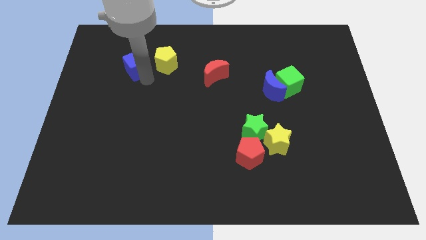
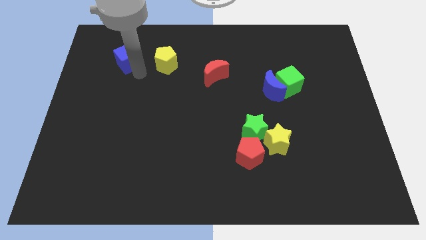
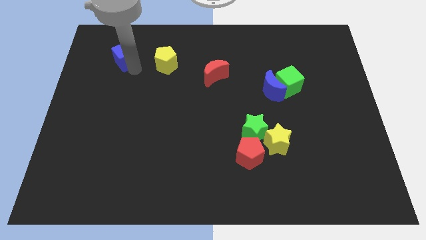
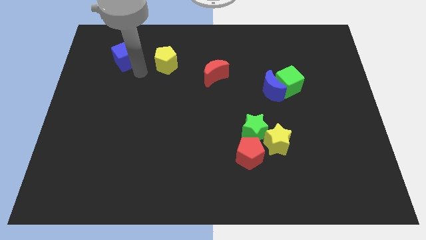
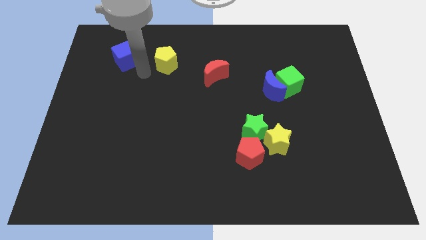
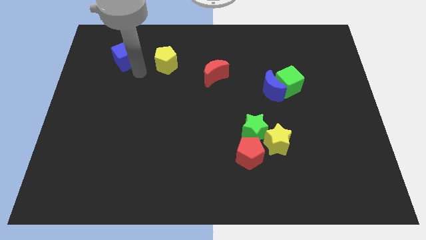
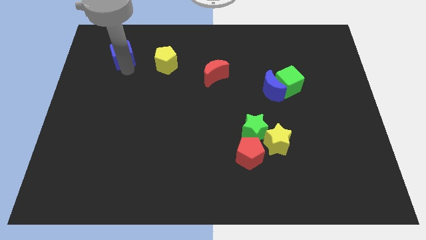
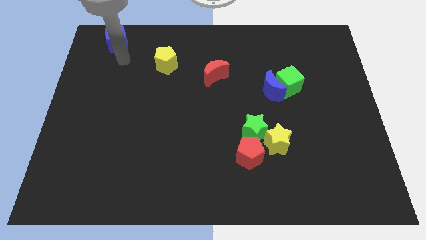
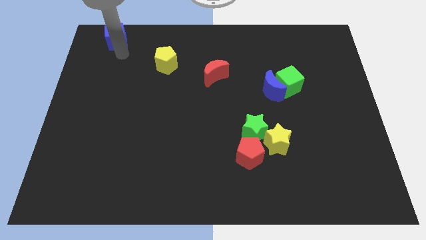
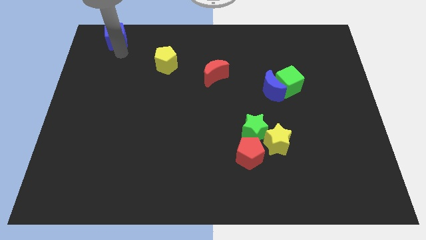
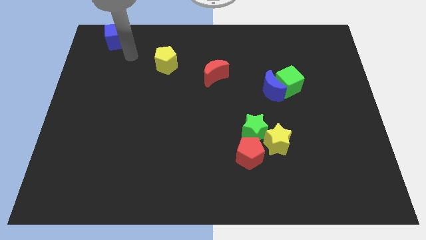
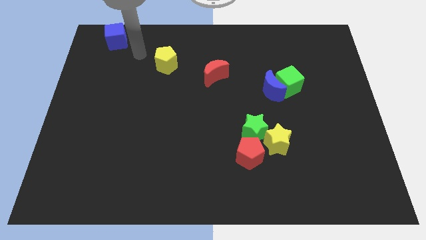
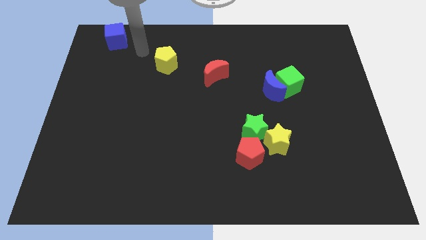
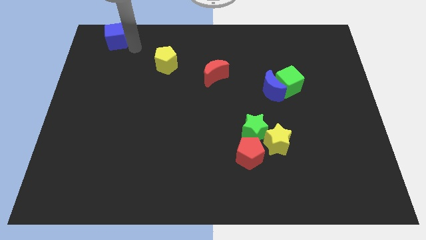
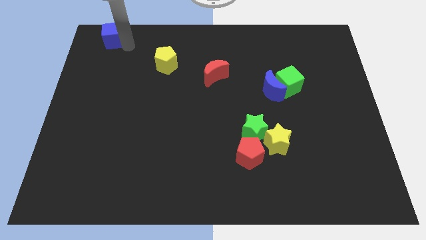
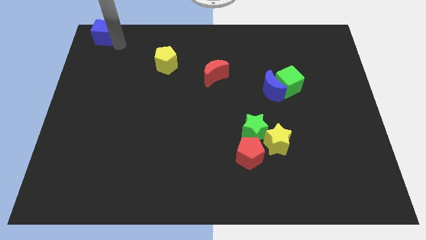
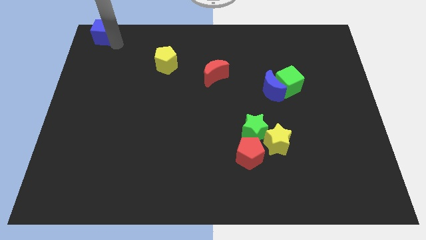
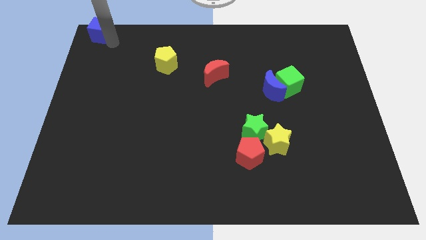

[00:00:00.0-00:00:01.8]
move the blue cube towards the top left corner

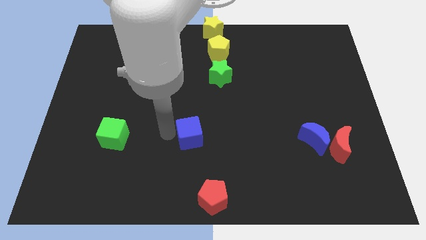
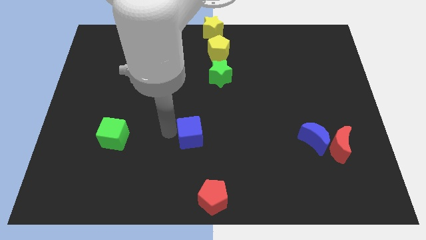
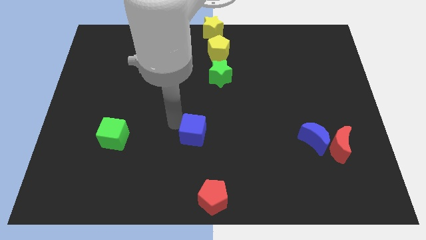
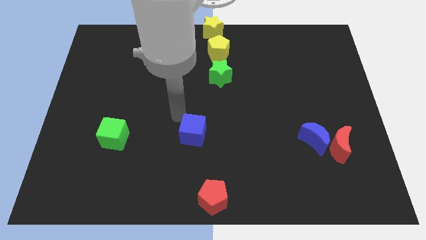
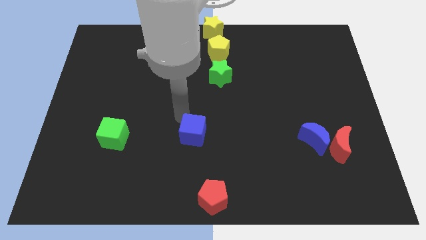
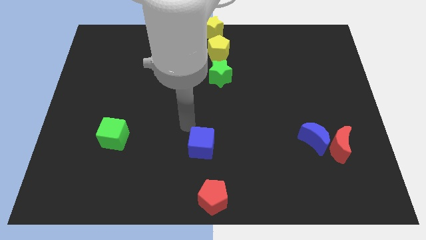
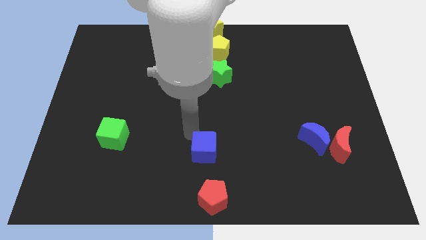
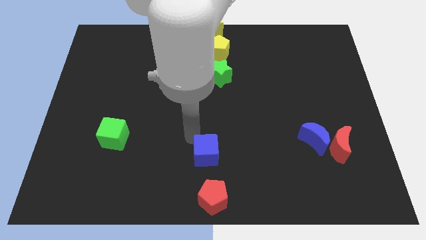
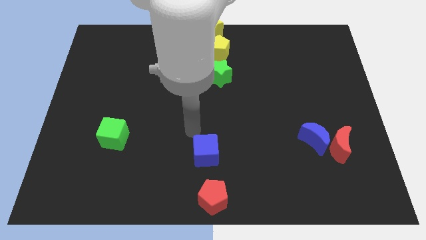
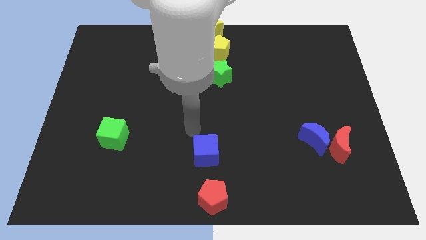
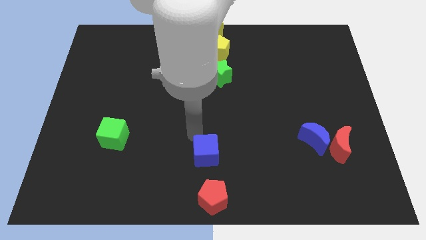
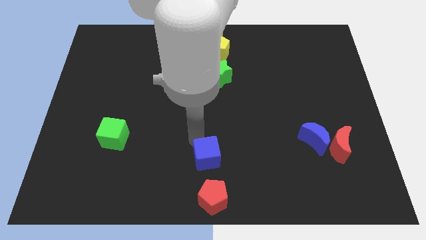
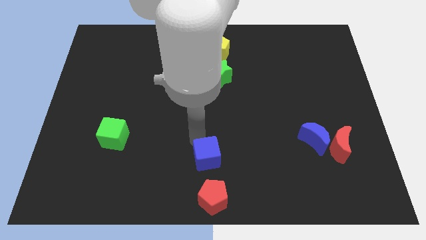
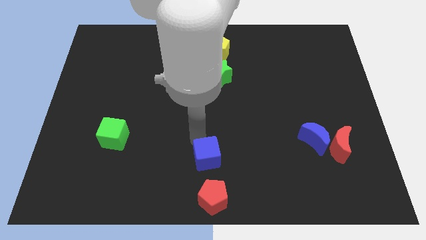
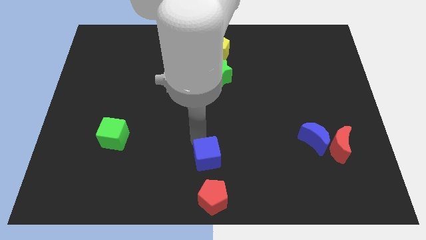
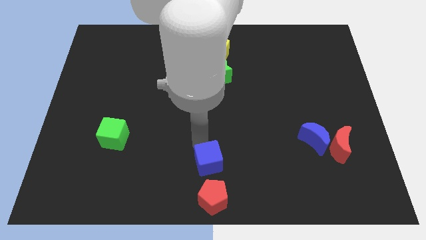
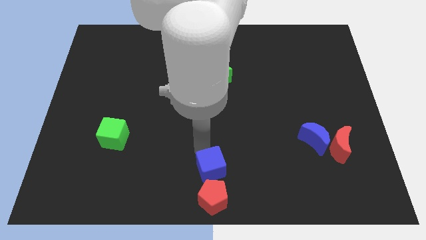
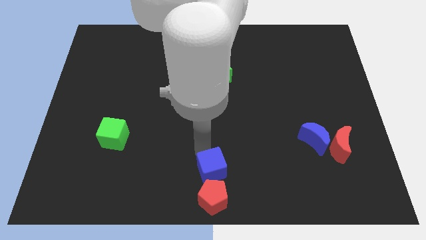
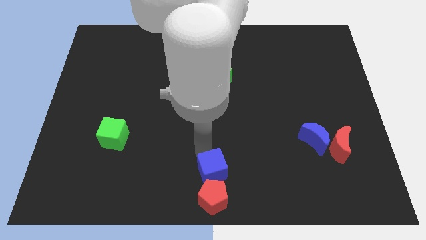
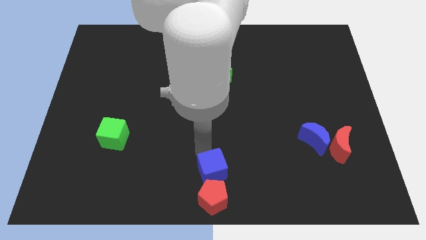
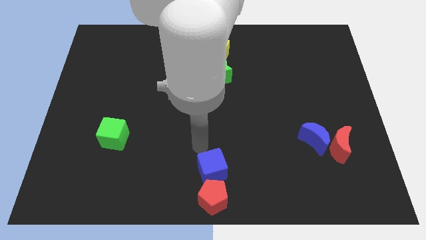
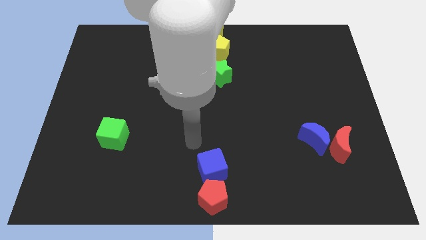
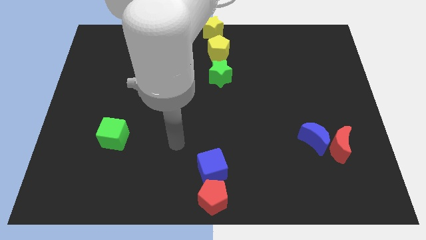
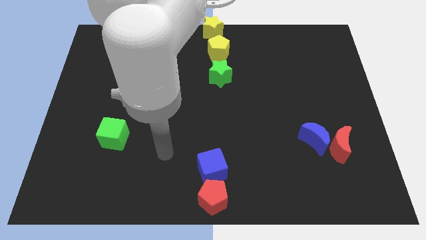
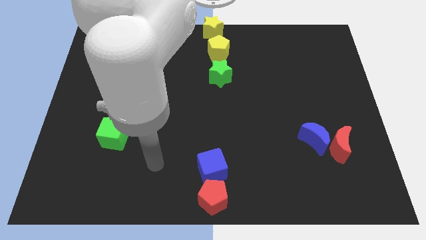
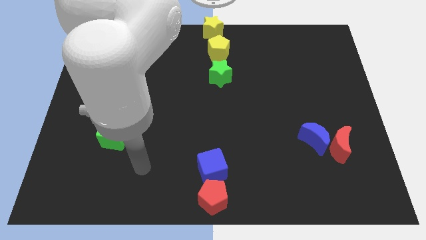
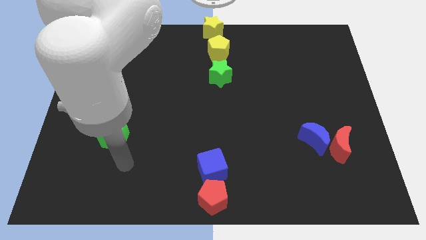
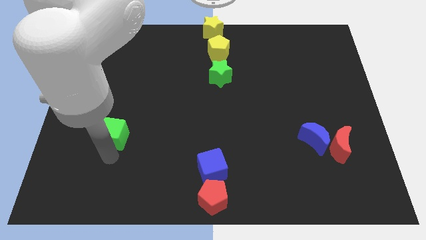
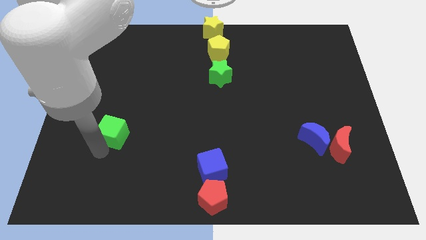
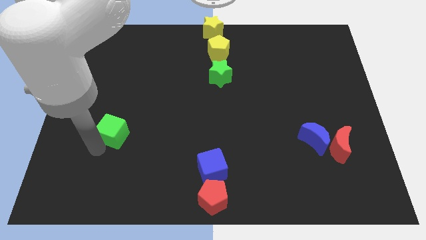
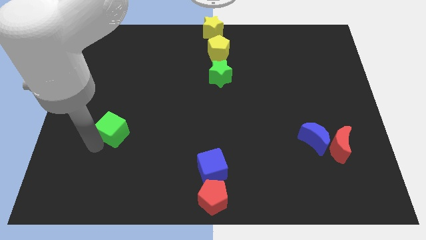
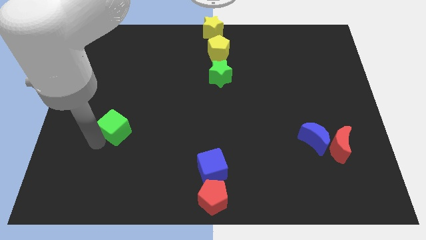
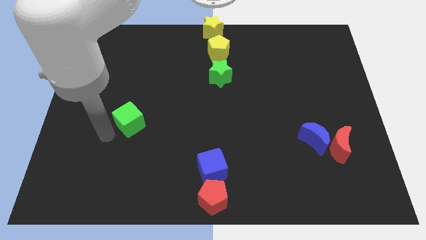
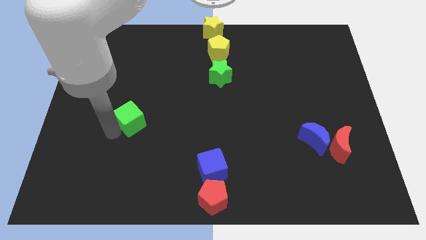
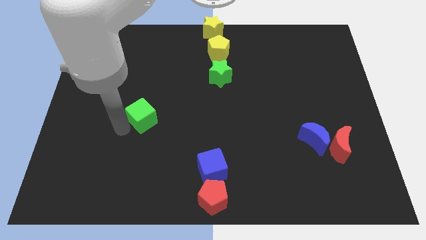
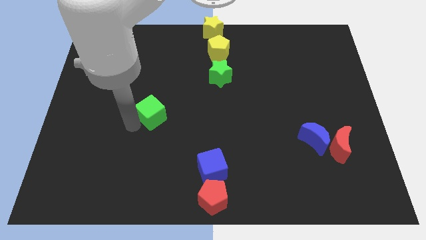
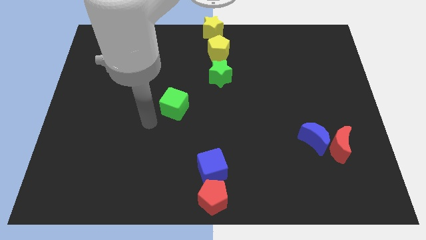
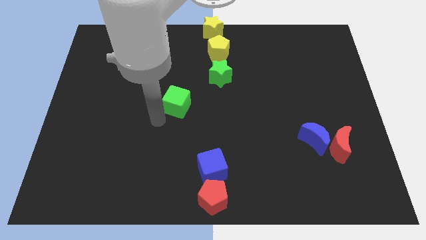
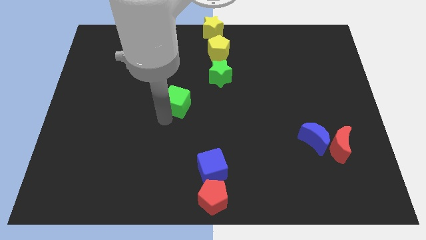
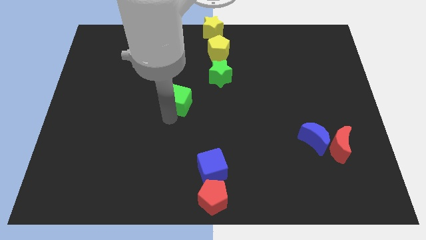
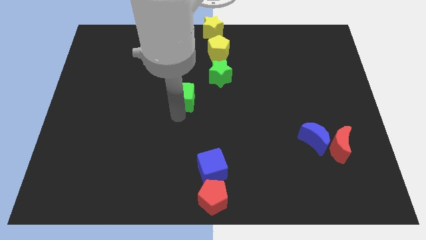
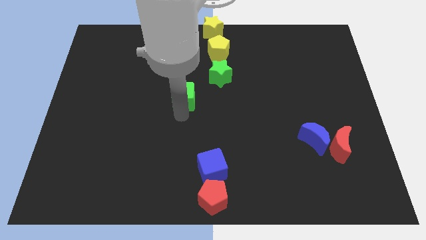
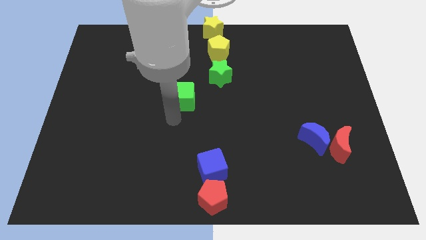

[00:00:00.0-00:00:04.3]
slide the green cube towards the green star

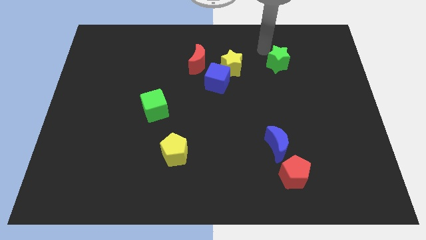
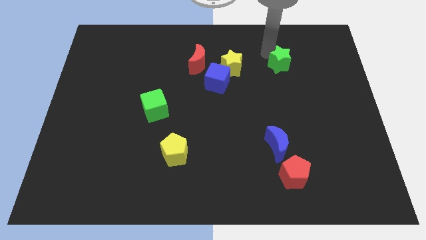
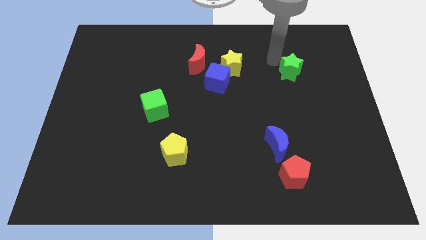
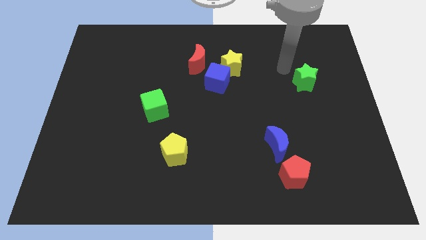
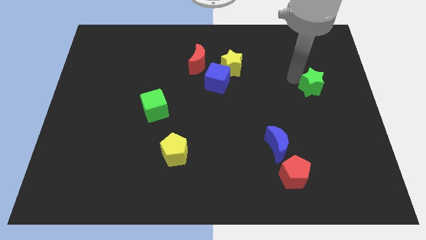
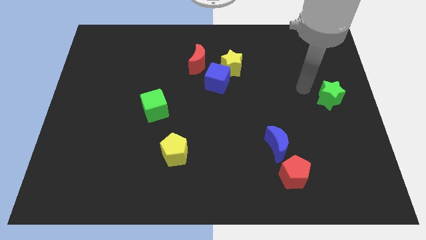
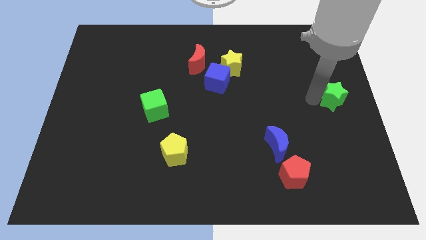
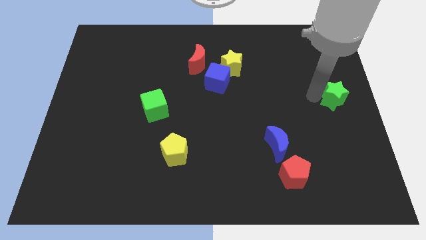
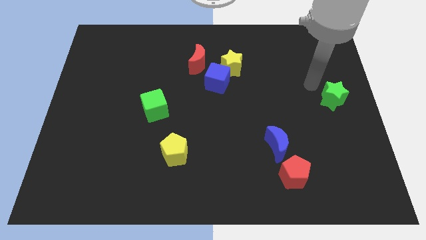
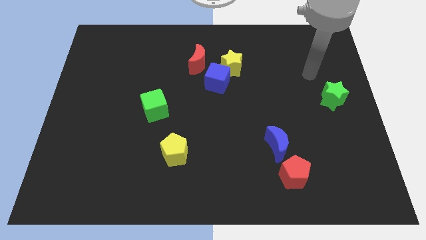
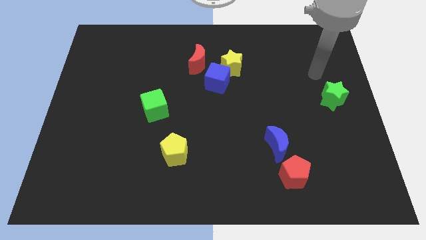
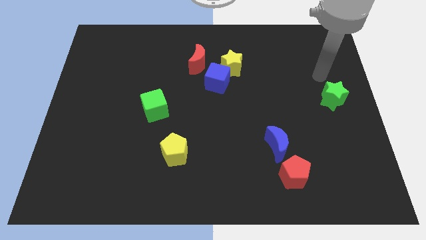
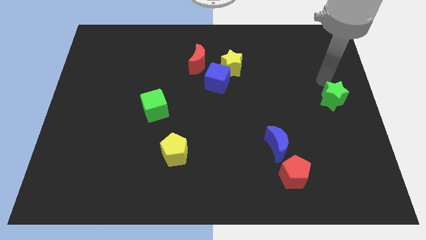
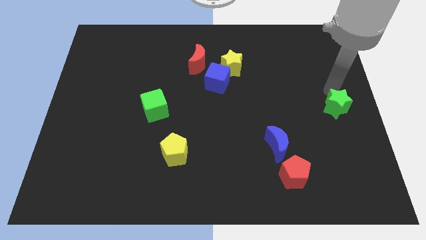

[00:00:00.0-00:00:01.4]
move the green star to the bottom right of the yellow star

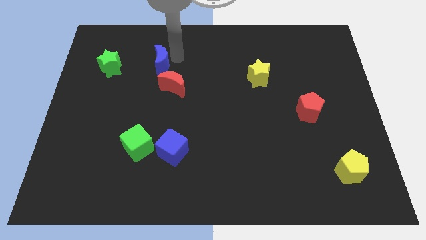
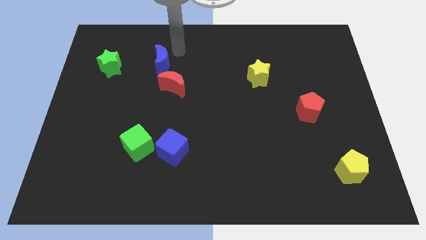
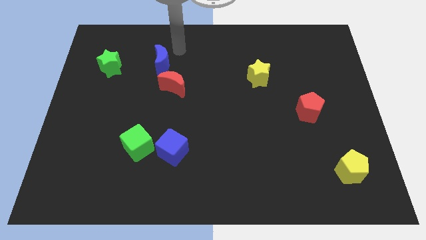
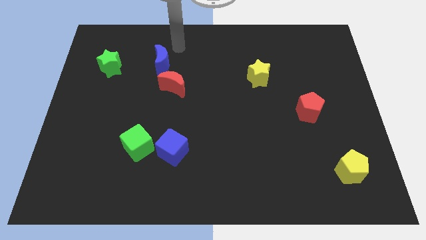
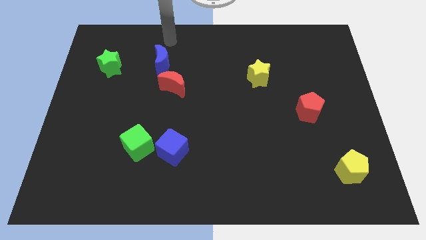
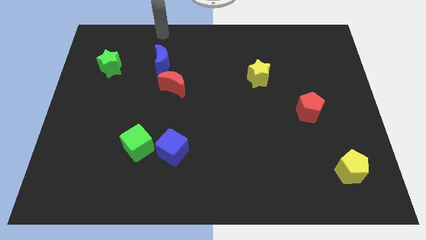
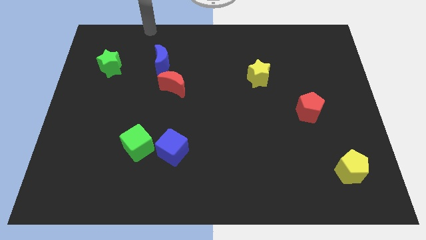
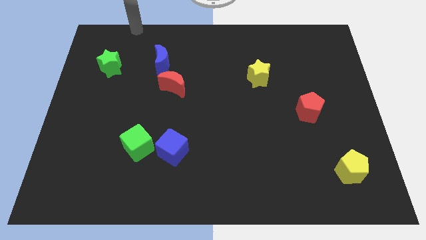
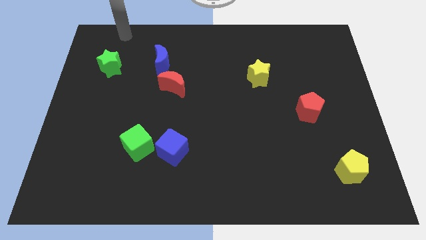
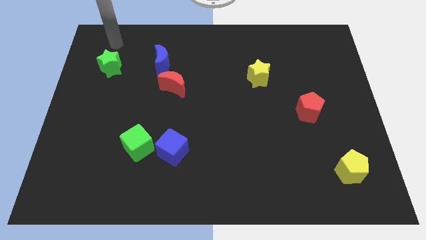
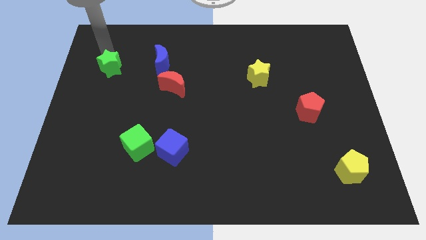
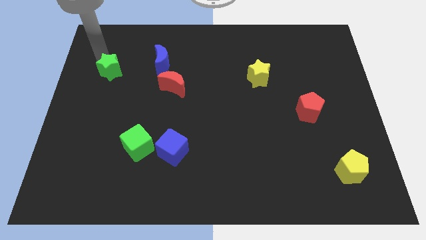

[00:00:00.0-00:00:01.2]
move your arm to the top of green star

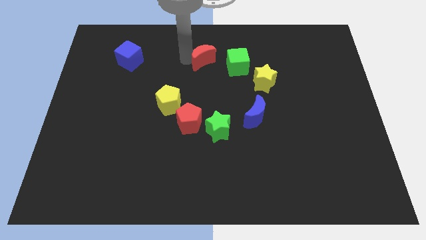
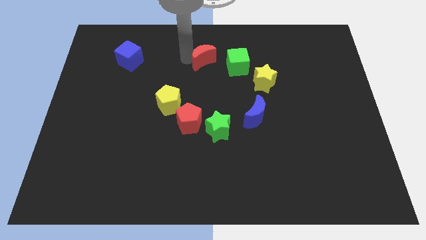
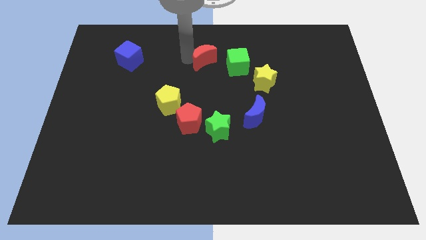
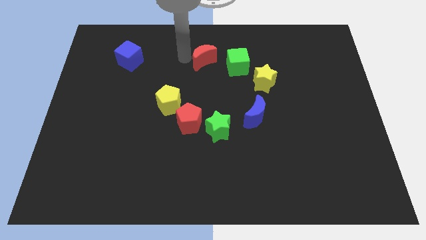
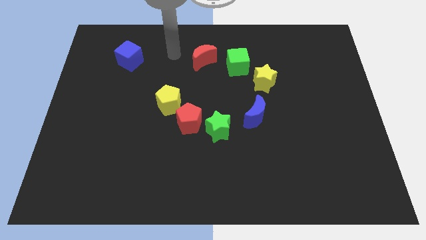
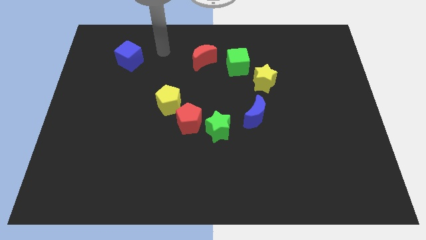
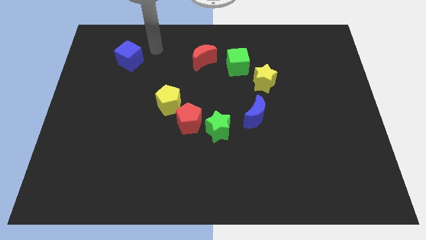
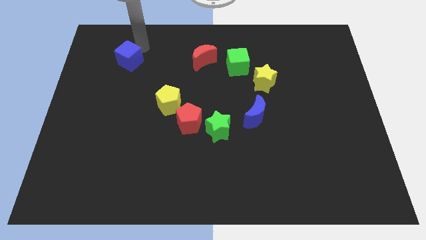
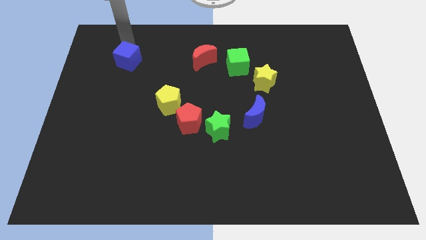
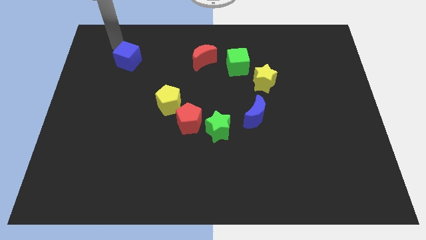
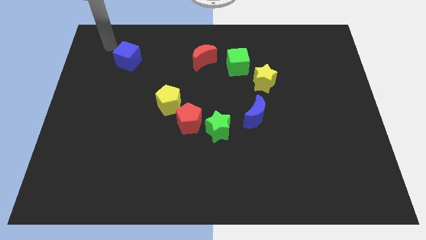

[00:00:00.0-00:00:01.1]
place your arm above the blue cube
